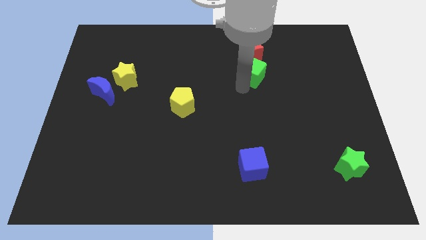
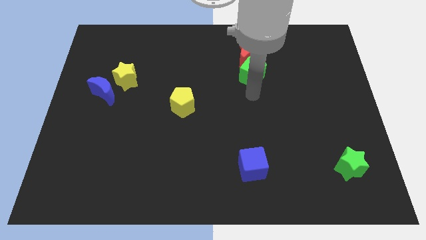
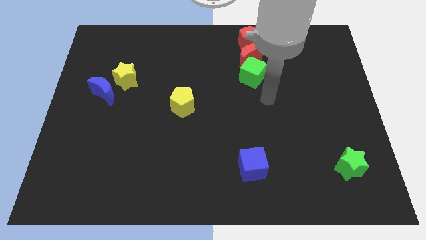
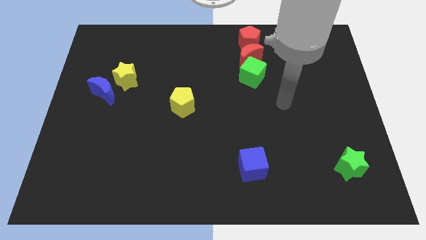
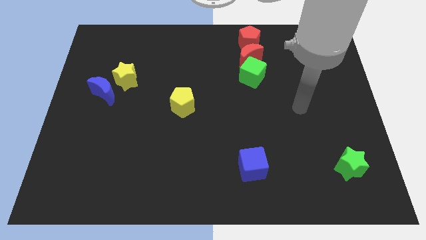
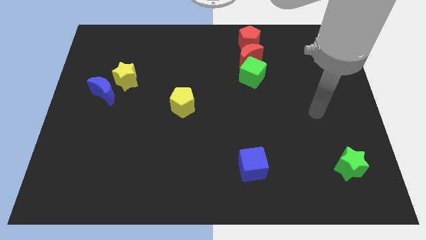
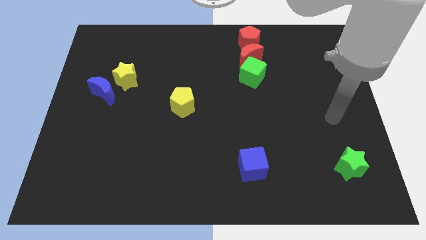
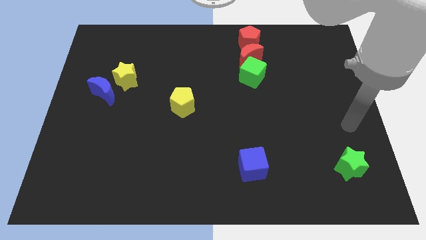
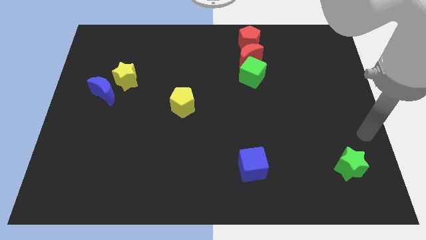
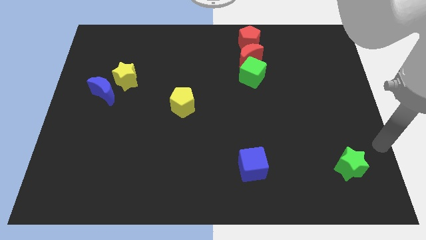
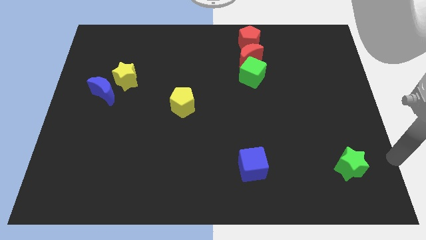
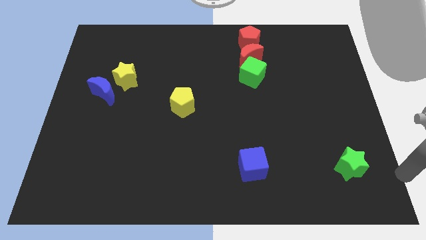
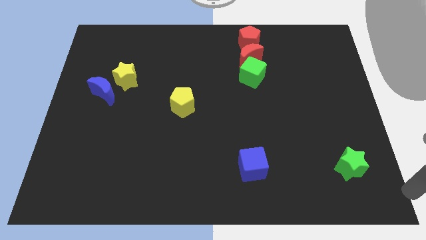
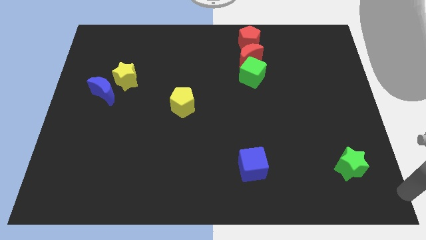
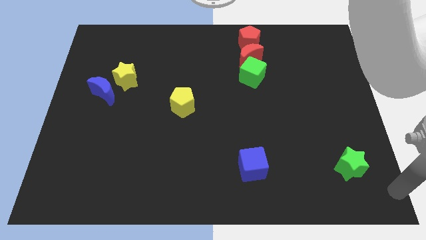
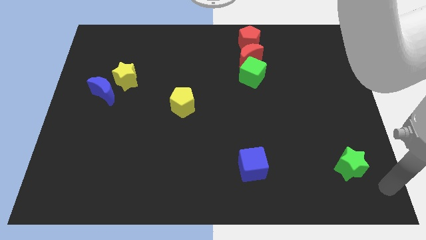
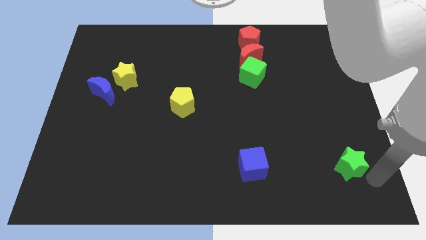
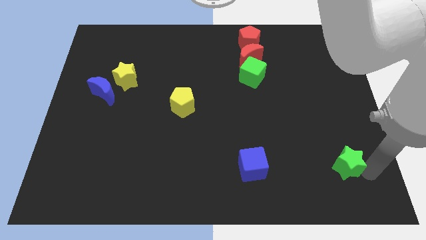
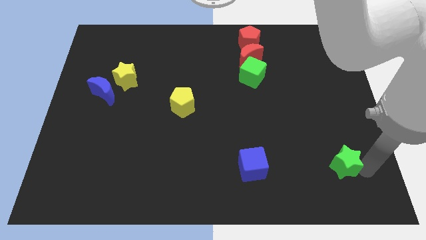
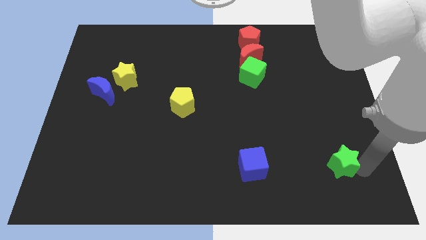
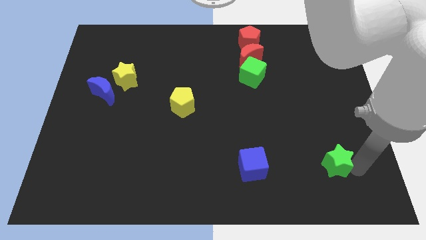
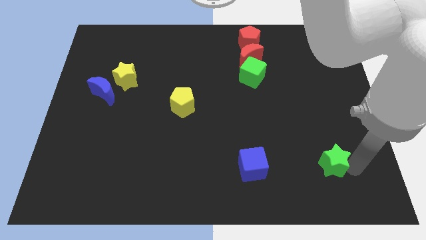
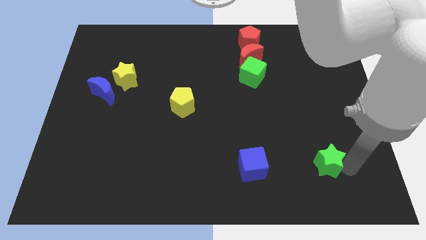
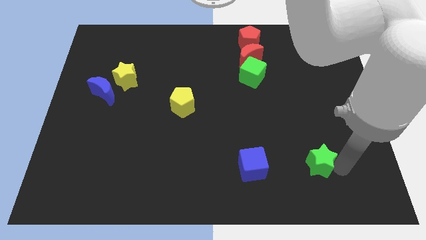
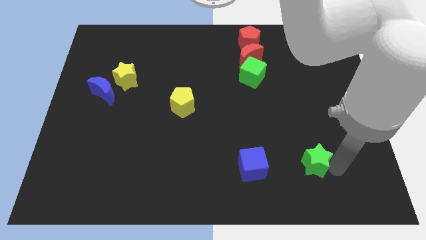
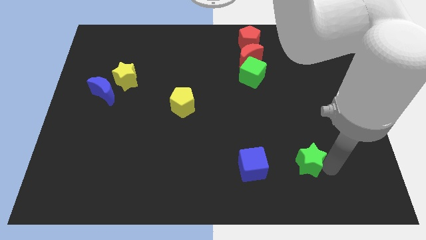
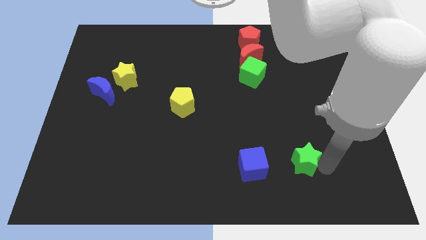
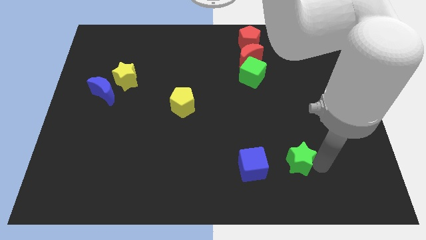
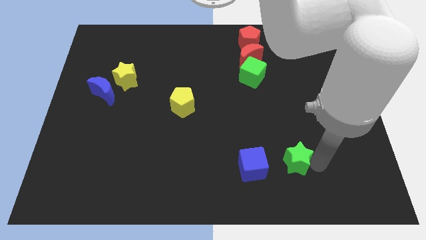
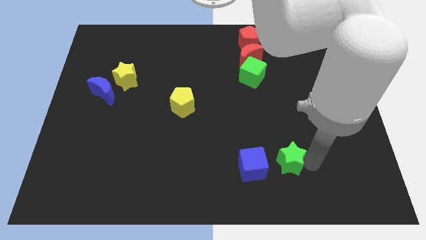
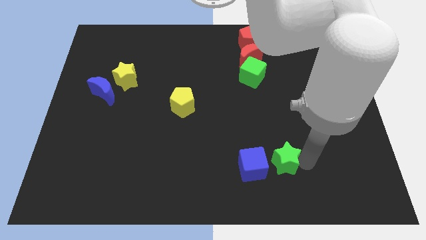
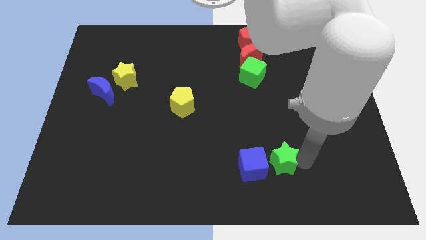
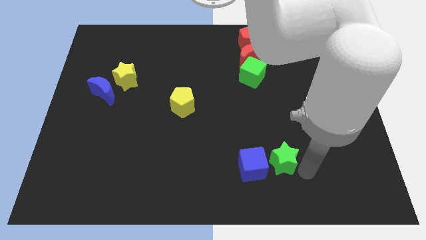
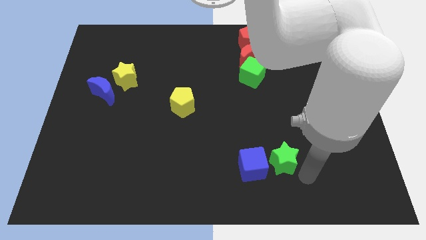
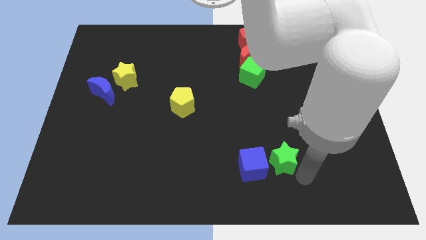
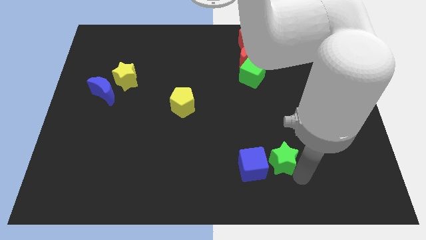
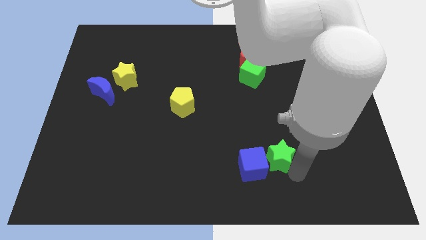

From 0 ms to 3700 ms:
move the green star to the right of the blue cube

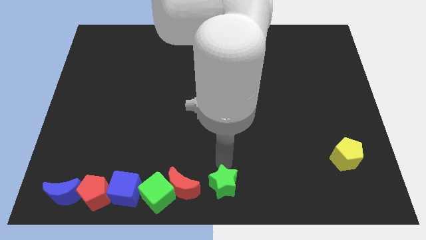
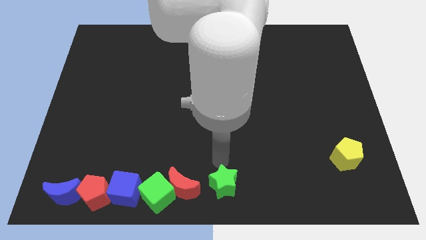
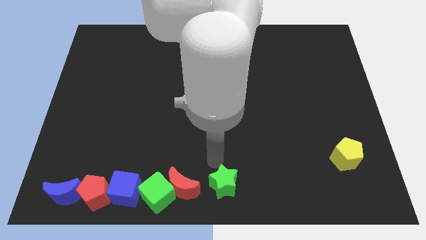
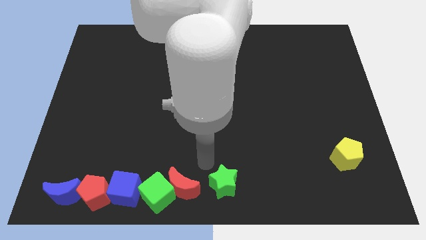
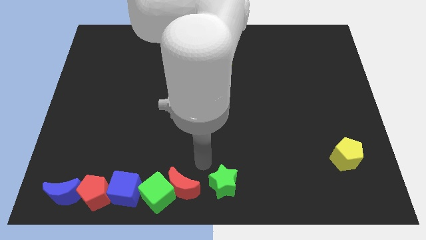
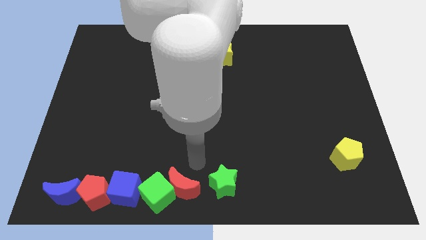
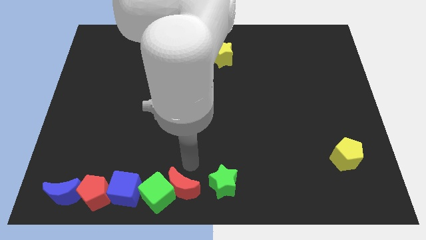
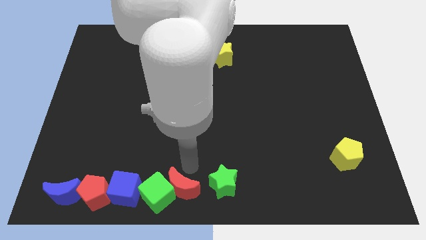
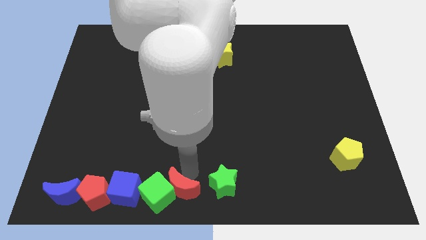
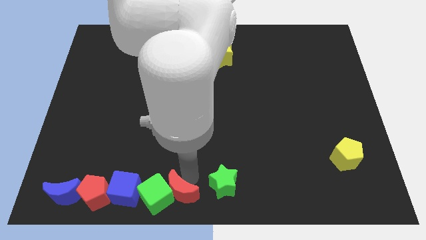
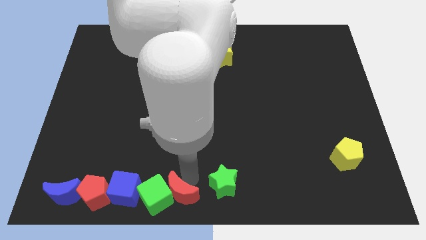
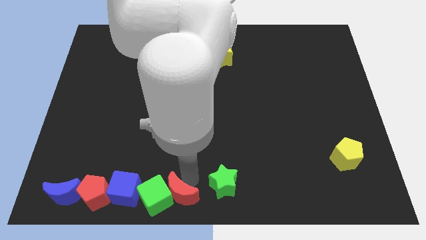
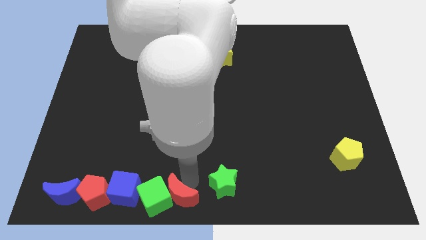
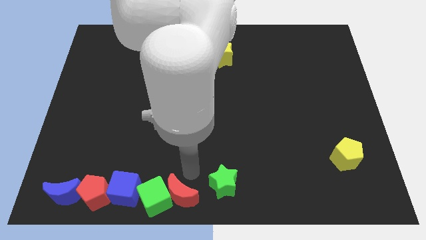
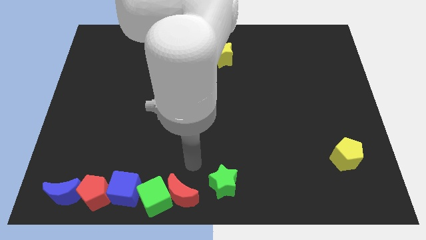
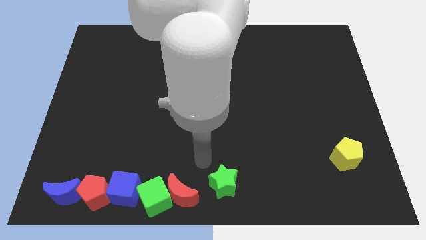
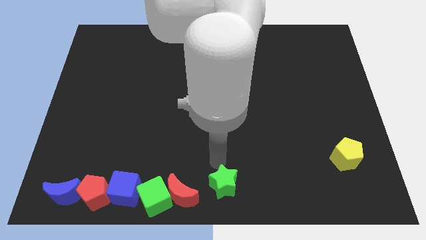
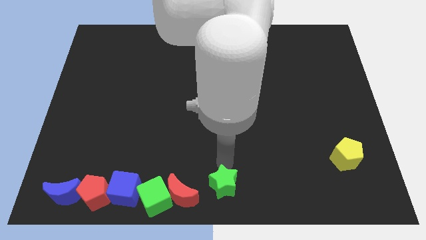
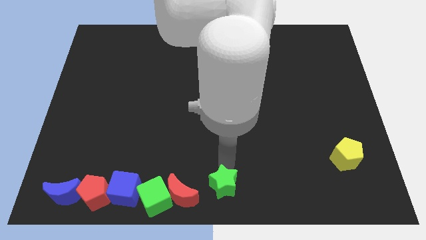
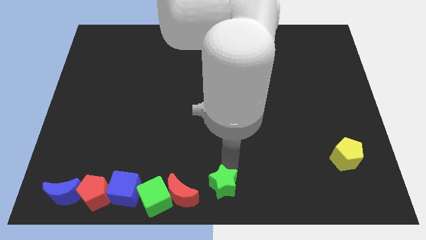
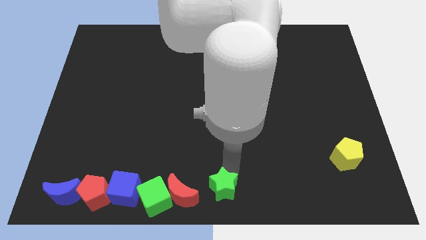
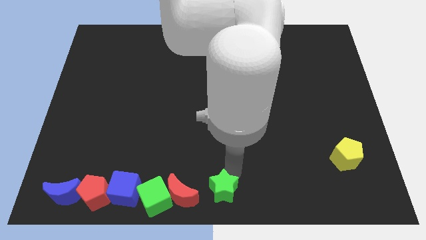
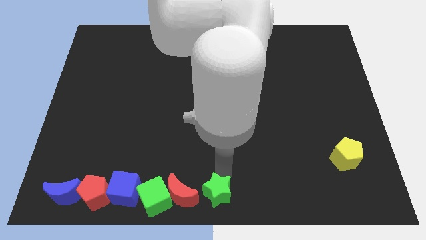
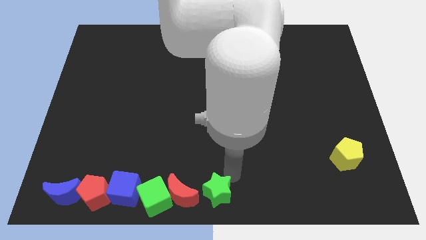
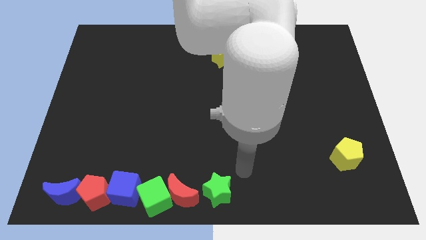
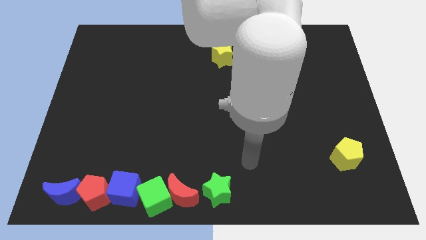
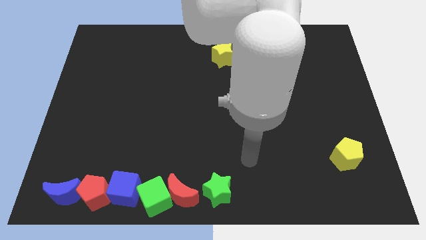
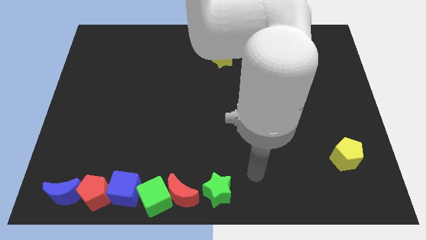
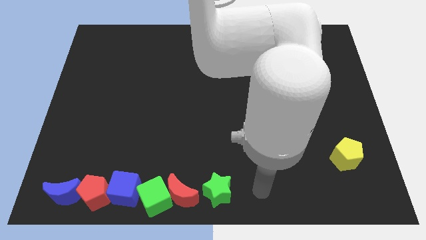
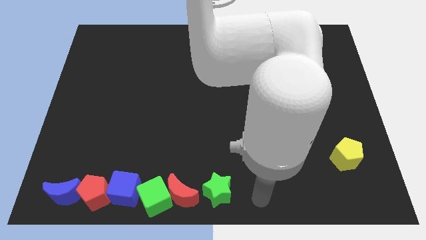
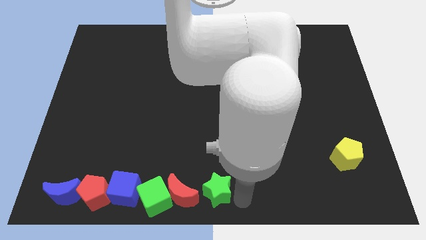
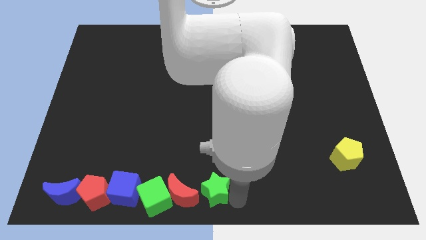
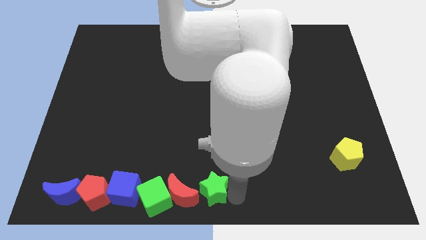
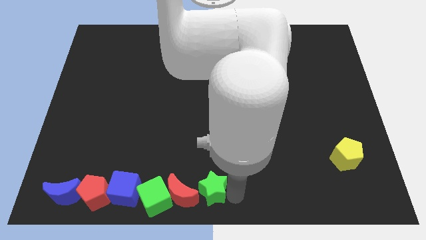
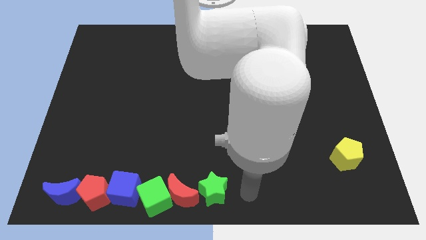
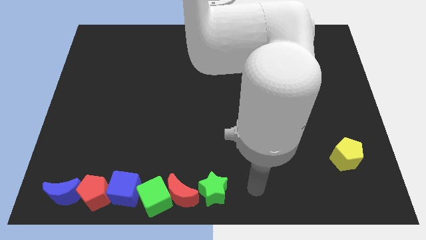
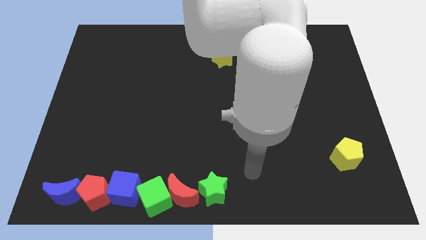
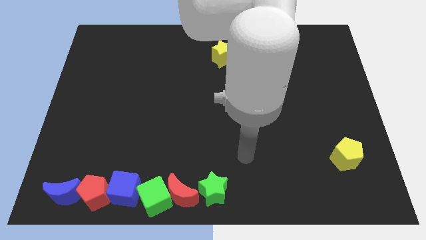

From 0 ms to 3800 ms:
adjust the green star green cube and red moon in a horizontal at the bottom

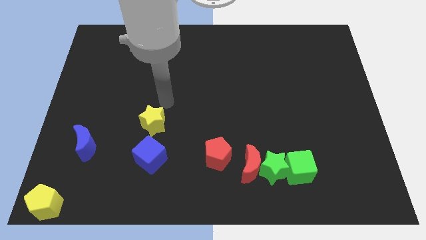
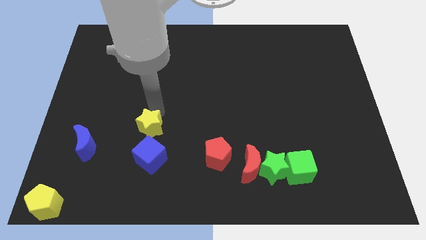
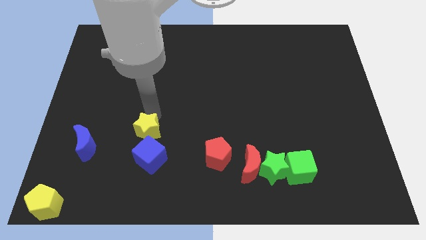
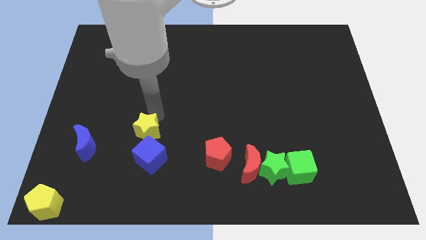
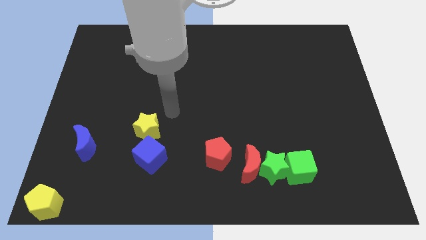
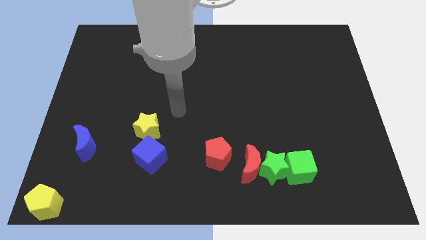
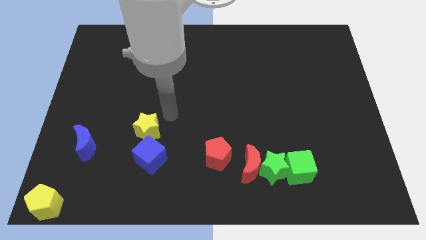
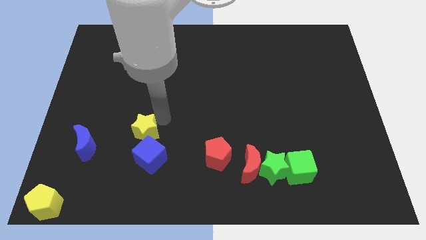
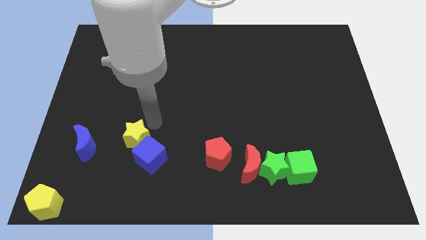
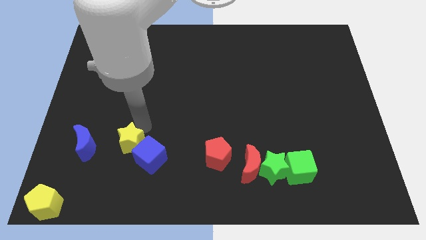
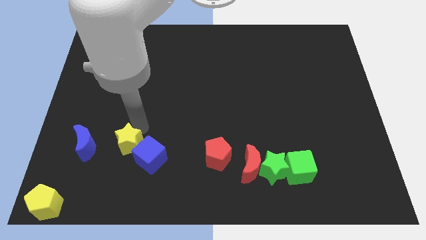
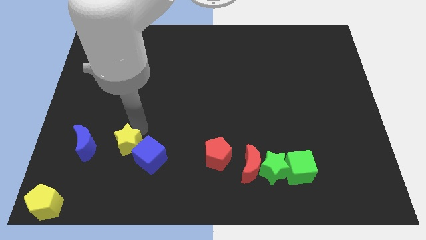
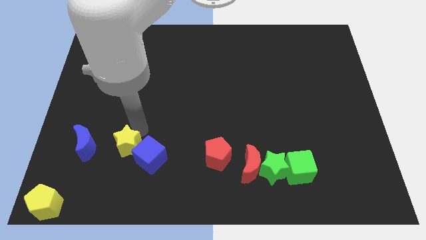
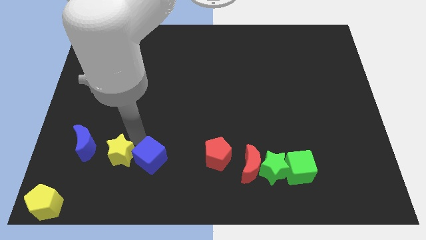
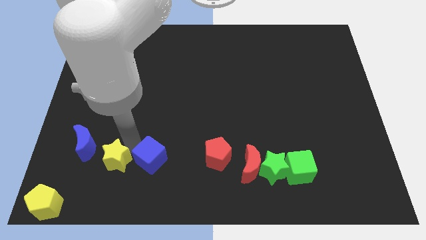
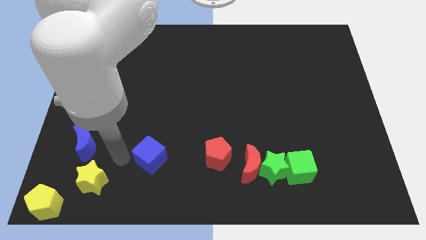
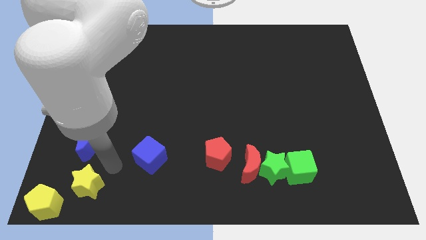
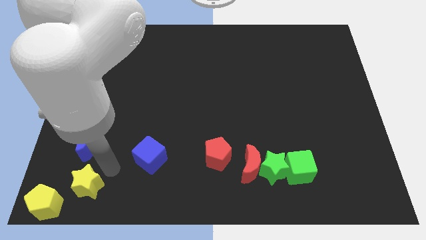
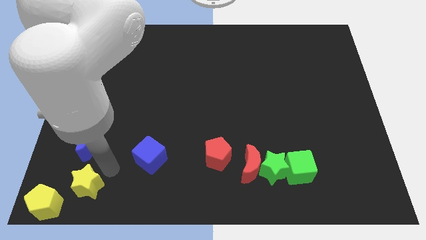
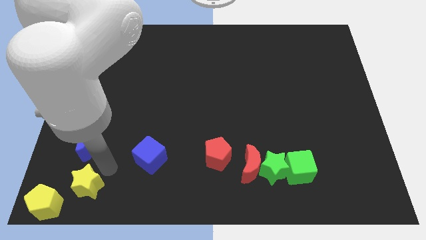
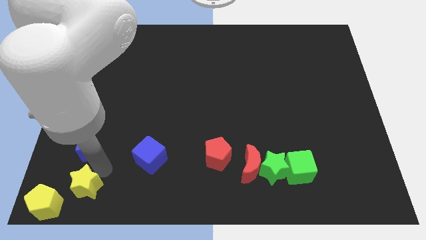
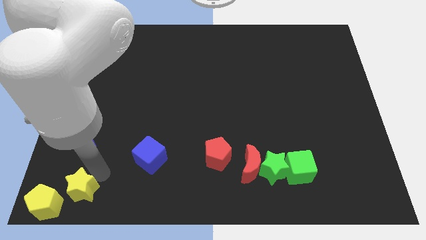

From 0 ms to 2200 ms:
place the yellow star diagonally top right to the yellow pentagon
